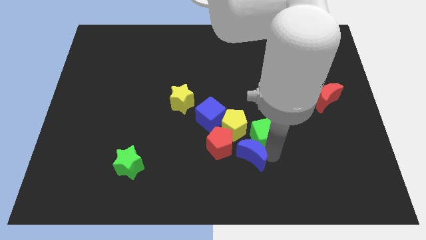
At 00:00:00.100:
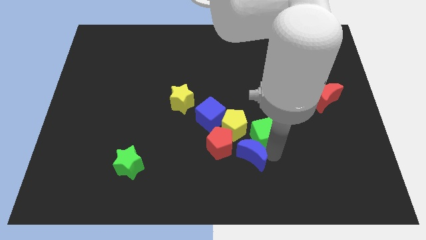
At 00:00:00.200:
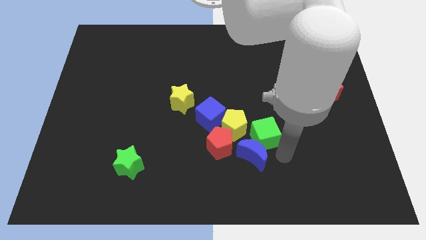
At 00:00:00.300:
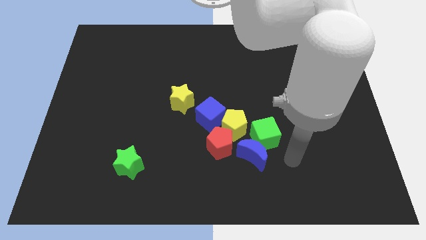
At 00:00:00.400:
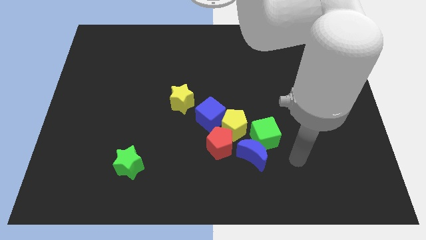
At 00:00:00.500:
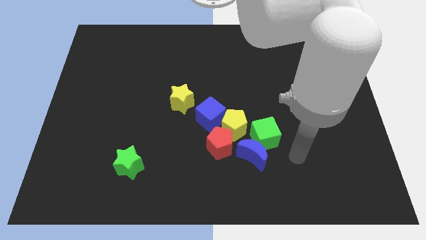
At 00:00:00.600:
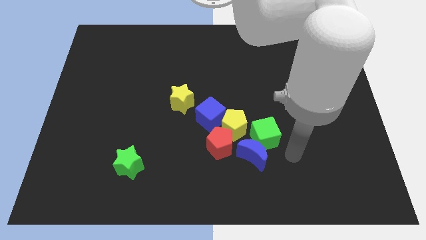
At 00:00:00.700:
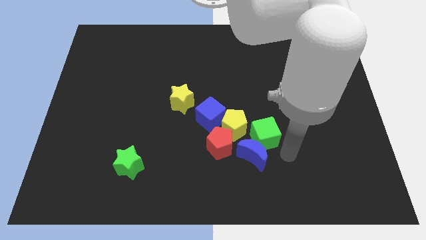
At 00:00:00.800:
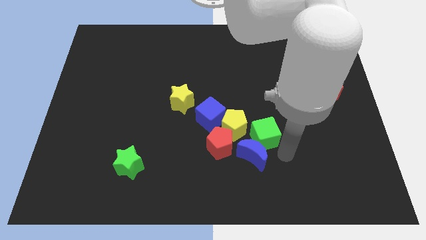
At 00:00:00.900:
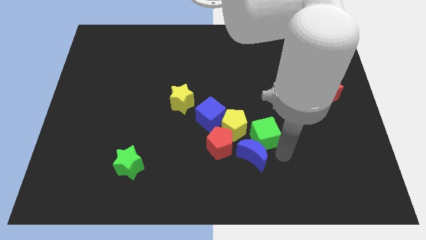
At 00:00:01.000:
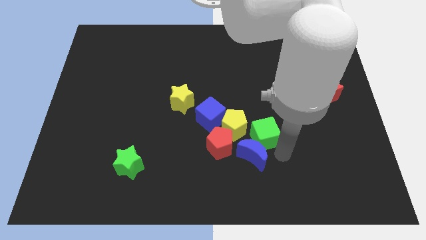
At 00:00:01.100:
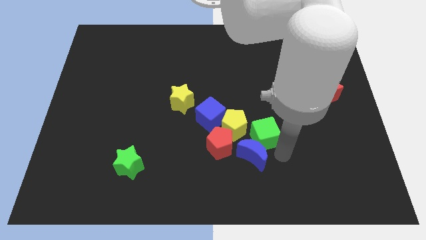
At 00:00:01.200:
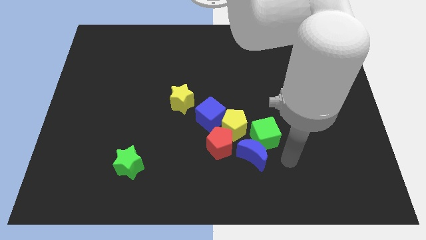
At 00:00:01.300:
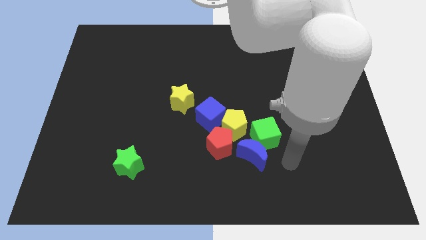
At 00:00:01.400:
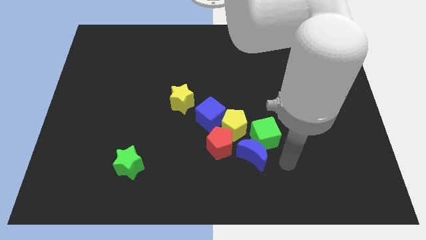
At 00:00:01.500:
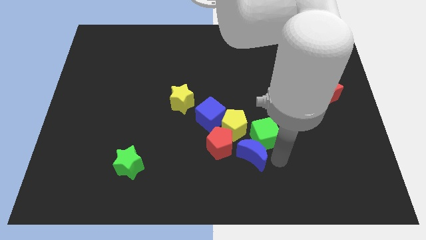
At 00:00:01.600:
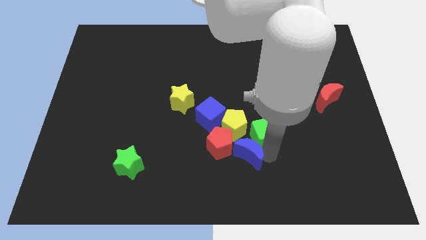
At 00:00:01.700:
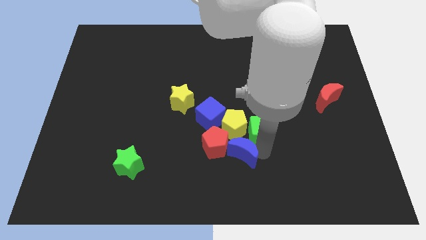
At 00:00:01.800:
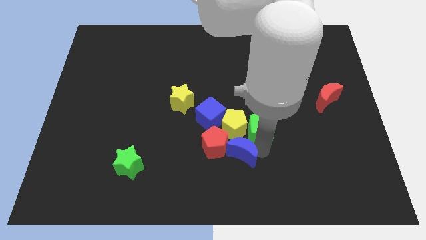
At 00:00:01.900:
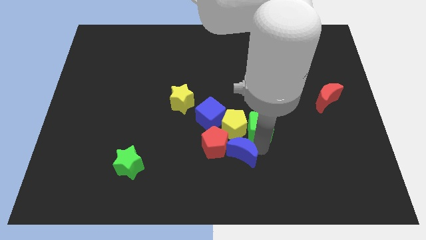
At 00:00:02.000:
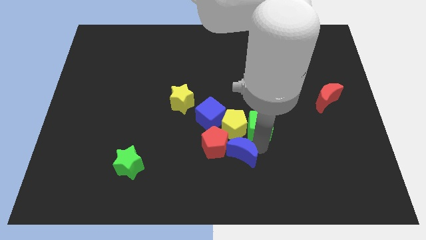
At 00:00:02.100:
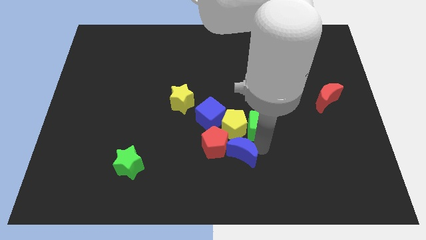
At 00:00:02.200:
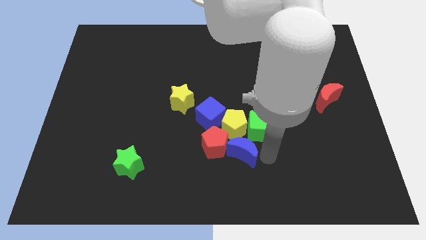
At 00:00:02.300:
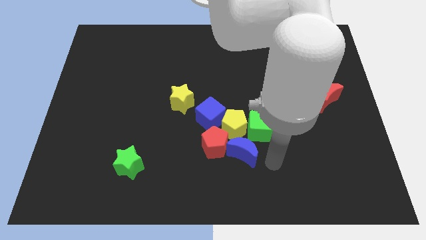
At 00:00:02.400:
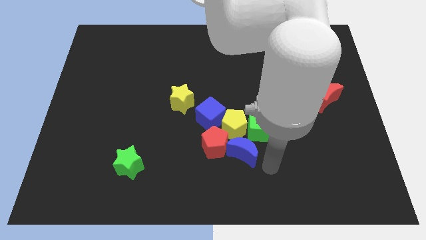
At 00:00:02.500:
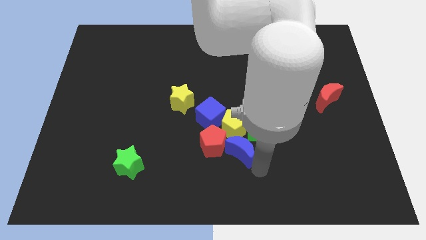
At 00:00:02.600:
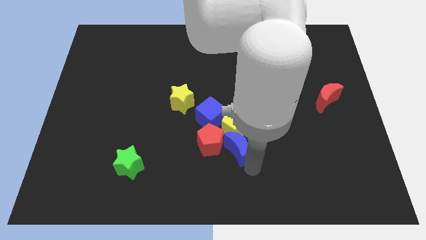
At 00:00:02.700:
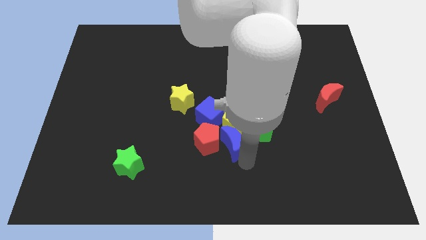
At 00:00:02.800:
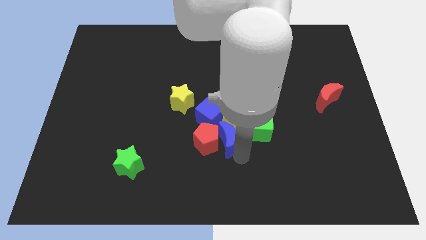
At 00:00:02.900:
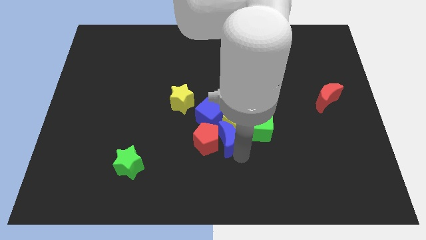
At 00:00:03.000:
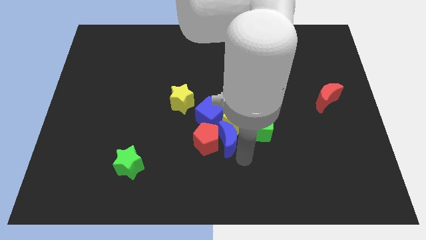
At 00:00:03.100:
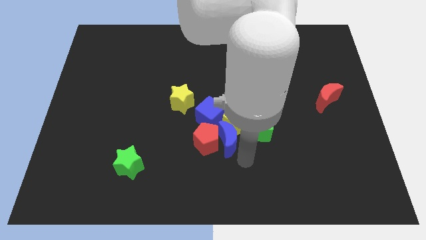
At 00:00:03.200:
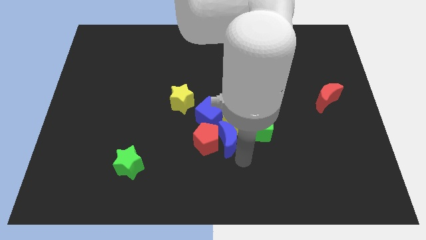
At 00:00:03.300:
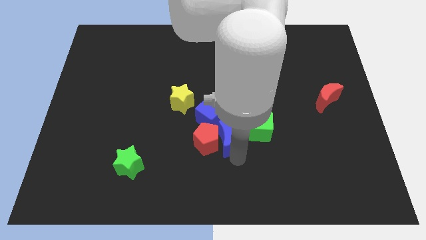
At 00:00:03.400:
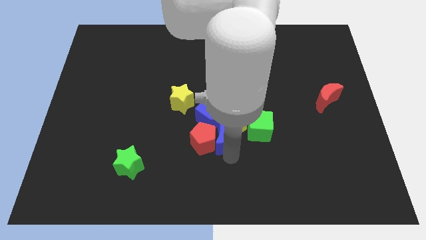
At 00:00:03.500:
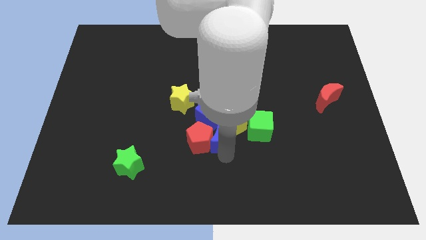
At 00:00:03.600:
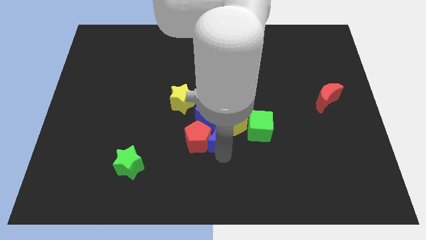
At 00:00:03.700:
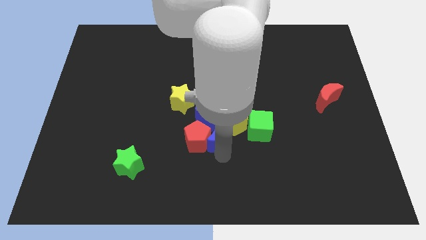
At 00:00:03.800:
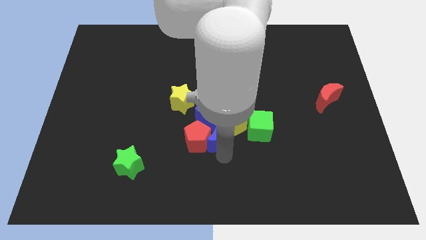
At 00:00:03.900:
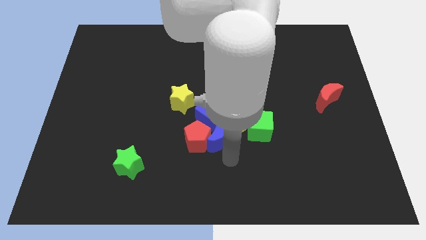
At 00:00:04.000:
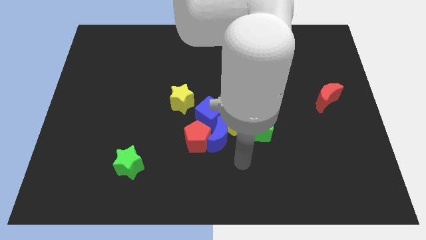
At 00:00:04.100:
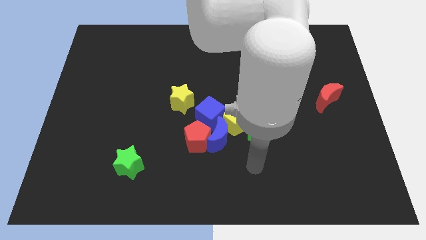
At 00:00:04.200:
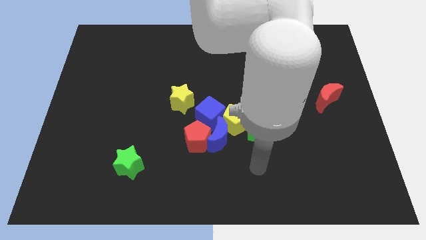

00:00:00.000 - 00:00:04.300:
move blue moon towards red pentagon

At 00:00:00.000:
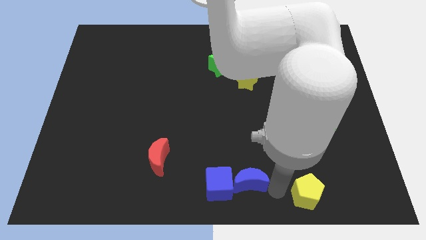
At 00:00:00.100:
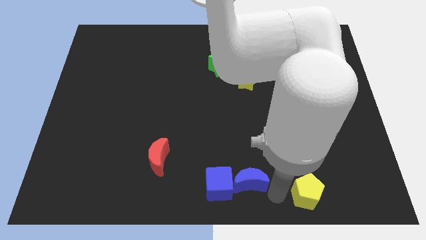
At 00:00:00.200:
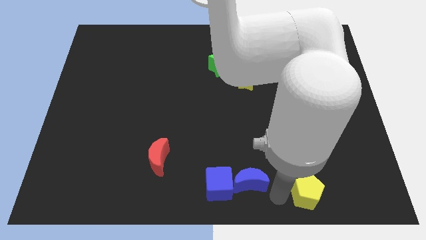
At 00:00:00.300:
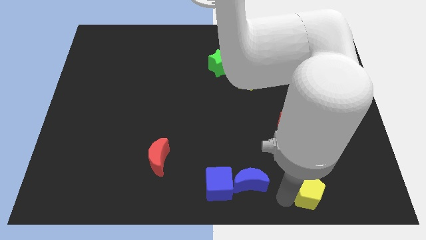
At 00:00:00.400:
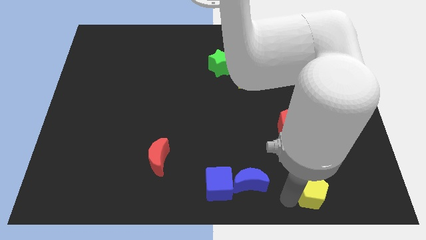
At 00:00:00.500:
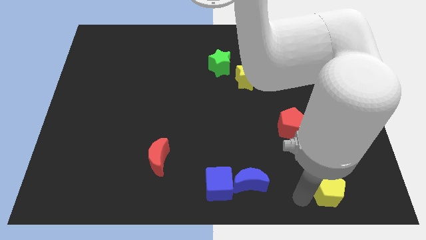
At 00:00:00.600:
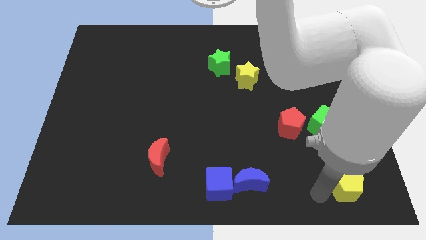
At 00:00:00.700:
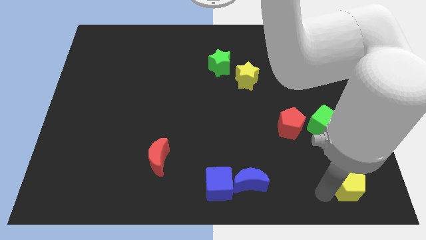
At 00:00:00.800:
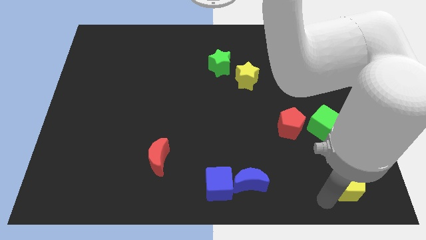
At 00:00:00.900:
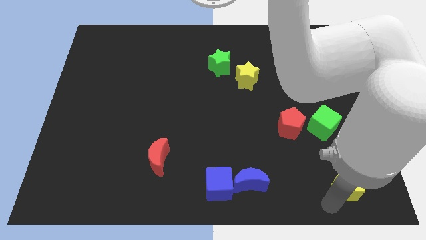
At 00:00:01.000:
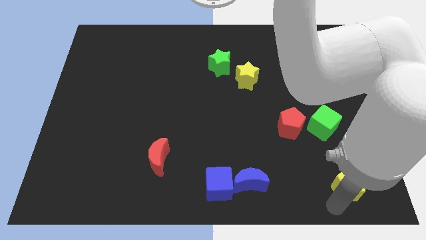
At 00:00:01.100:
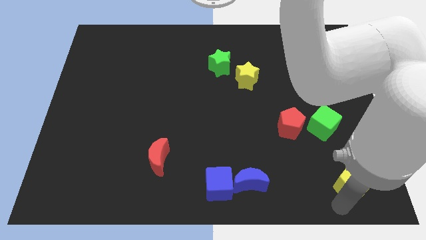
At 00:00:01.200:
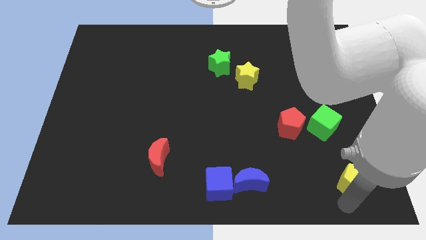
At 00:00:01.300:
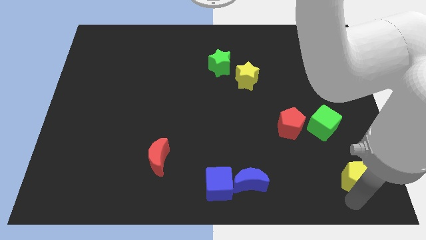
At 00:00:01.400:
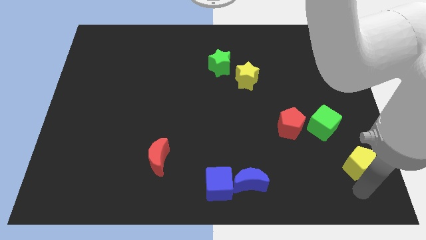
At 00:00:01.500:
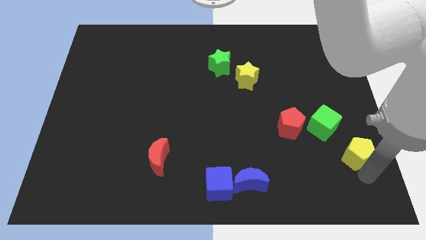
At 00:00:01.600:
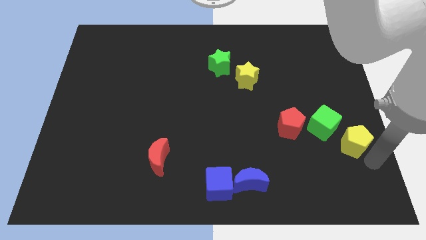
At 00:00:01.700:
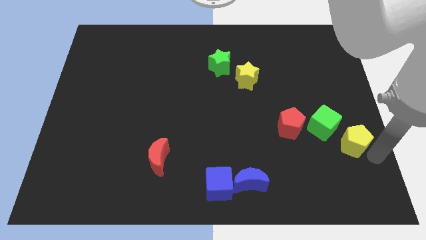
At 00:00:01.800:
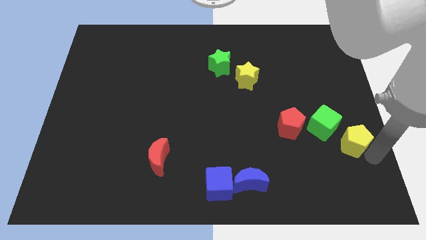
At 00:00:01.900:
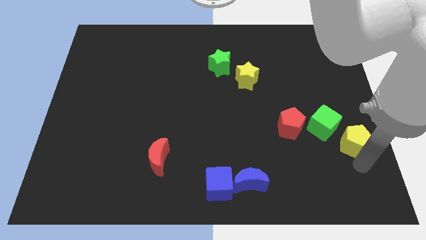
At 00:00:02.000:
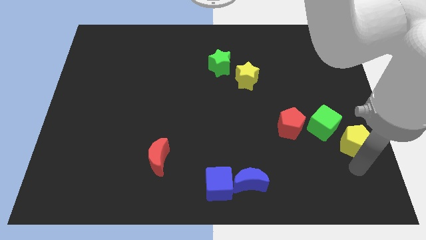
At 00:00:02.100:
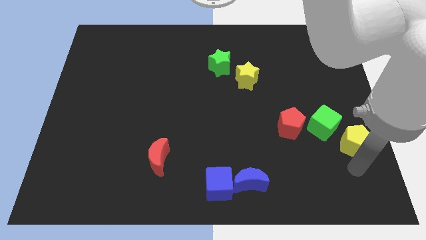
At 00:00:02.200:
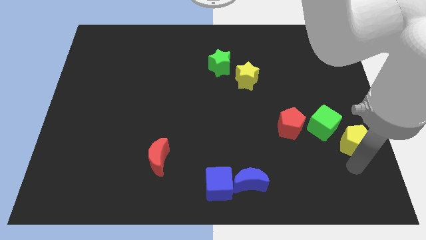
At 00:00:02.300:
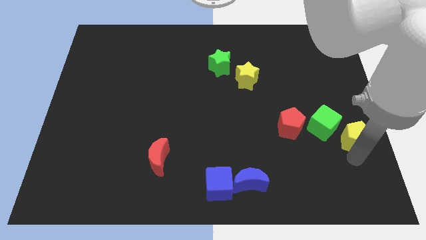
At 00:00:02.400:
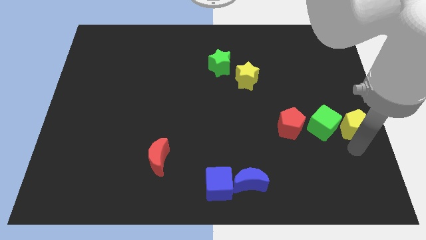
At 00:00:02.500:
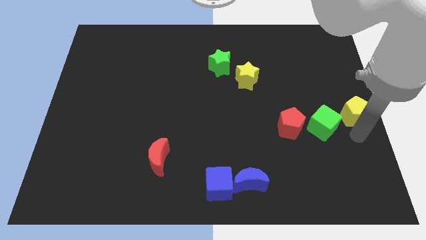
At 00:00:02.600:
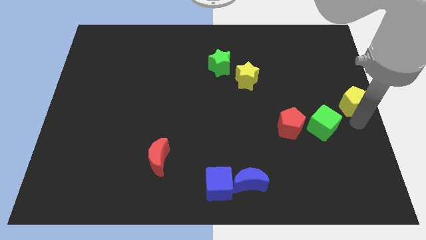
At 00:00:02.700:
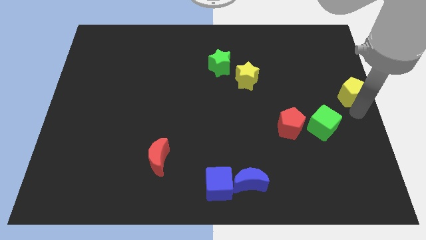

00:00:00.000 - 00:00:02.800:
drag the yellow pentagon slightly upwards

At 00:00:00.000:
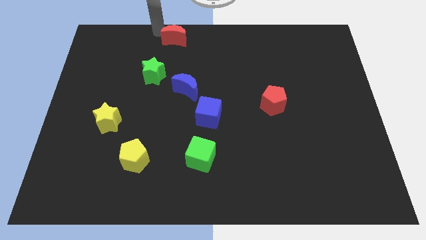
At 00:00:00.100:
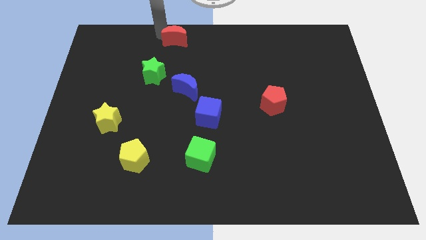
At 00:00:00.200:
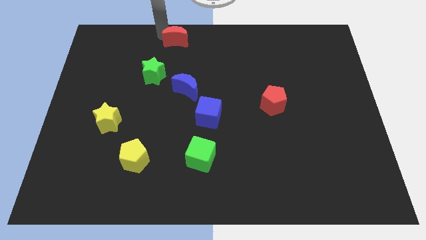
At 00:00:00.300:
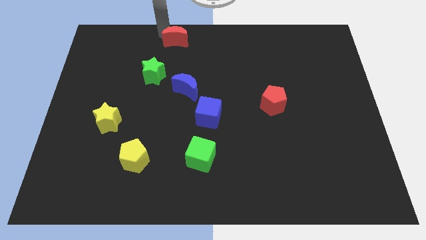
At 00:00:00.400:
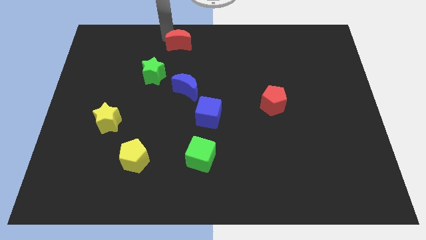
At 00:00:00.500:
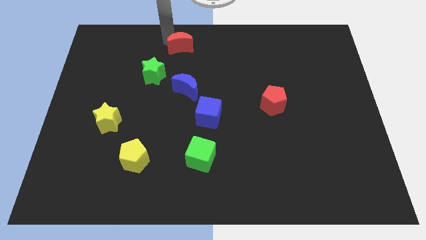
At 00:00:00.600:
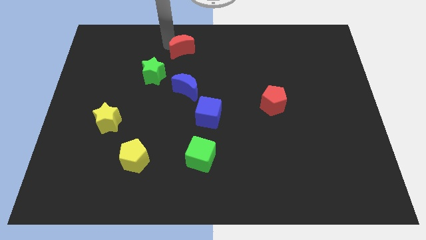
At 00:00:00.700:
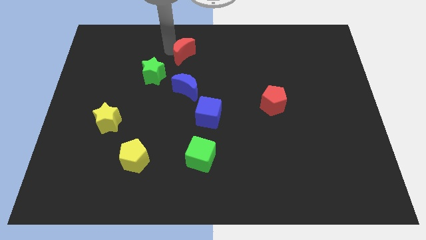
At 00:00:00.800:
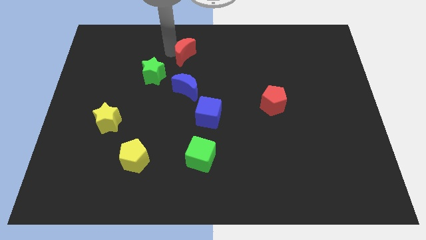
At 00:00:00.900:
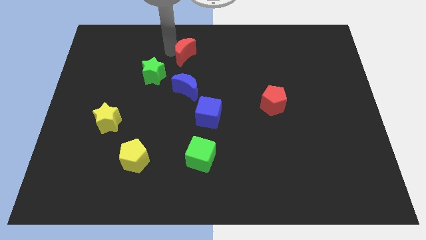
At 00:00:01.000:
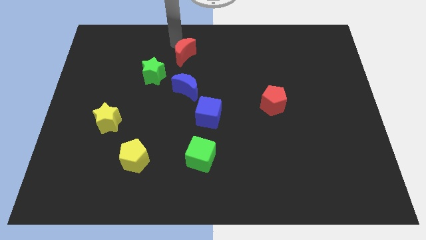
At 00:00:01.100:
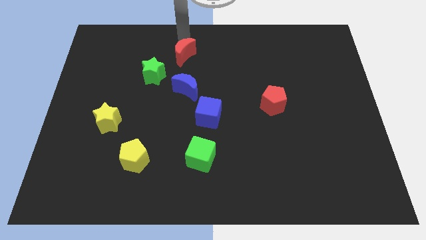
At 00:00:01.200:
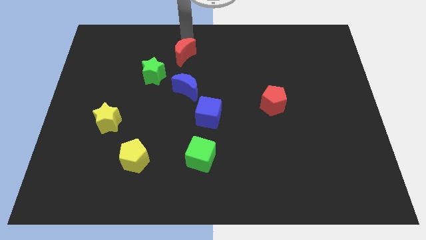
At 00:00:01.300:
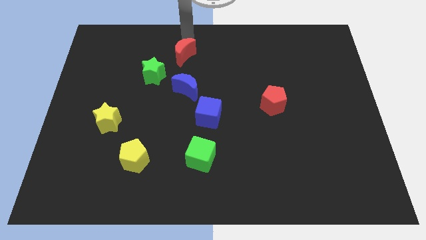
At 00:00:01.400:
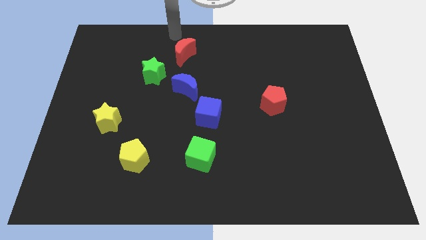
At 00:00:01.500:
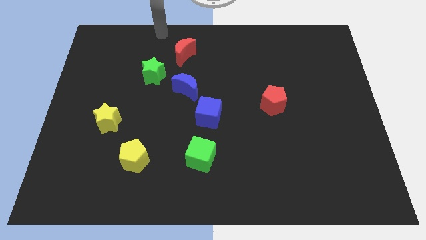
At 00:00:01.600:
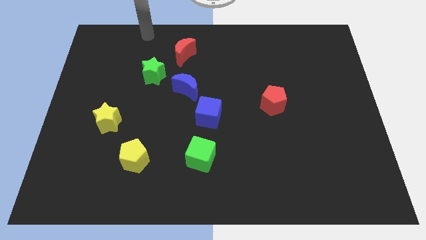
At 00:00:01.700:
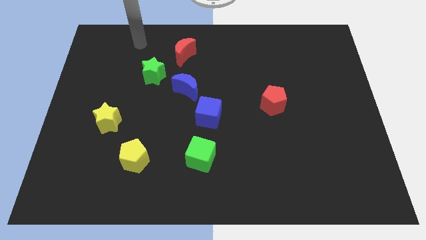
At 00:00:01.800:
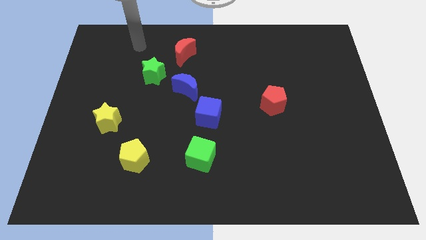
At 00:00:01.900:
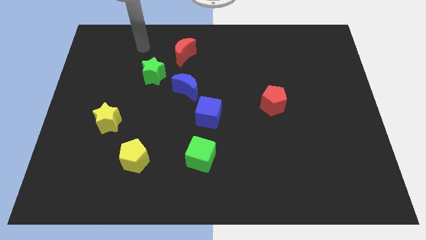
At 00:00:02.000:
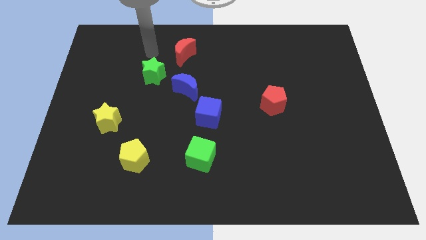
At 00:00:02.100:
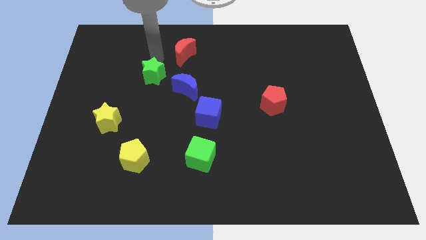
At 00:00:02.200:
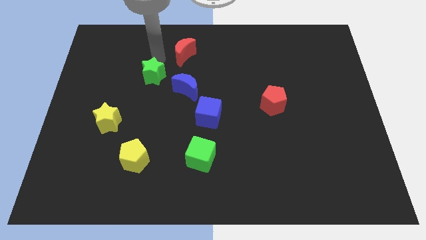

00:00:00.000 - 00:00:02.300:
drag the red moon towards the blue moon
